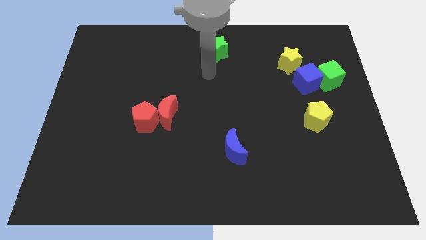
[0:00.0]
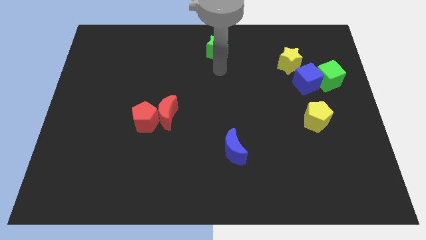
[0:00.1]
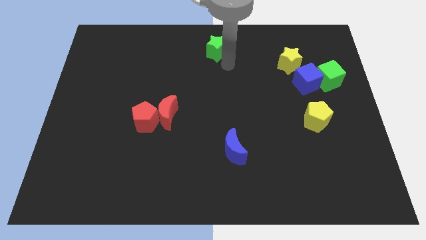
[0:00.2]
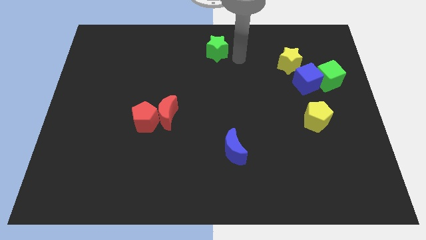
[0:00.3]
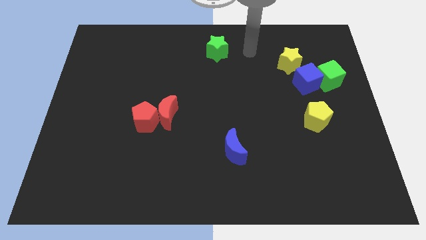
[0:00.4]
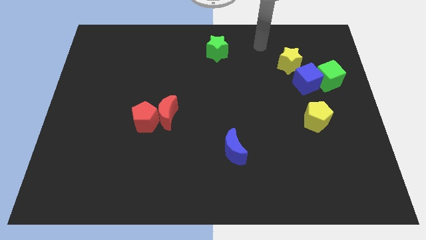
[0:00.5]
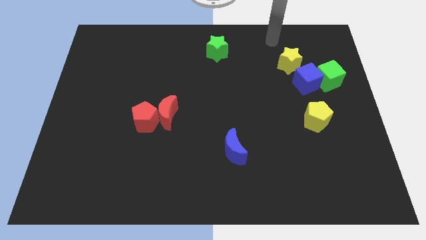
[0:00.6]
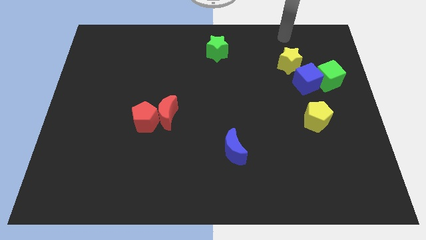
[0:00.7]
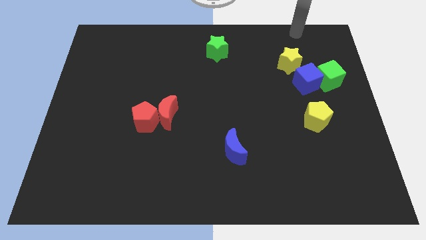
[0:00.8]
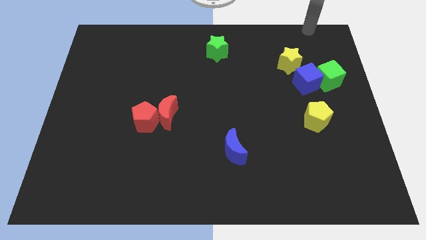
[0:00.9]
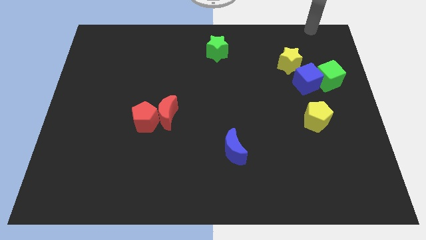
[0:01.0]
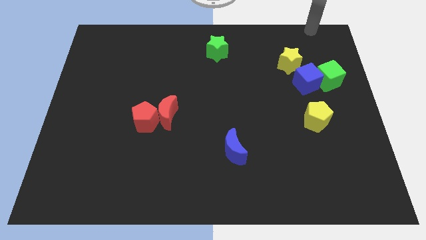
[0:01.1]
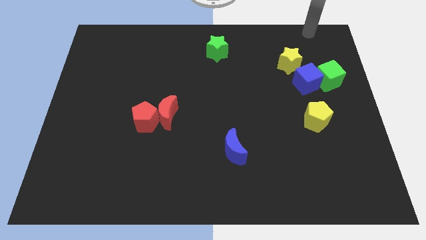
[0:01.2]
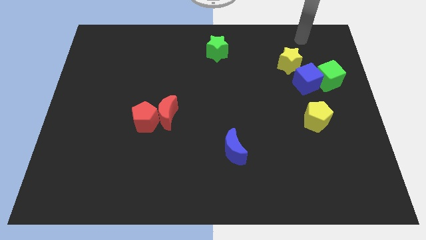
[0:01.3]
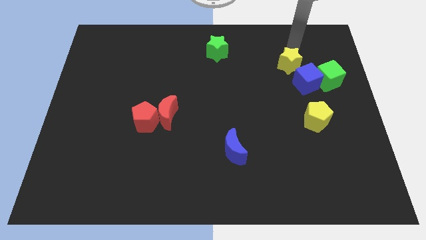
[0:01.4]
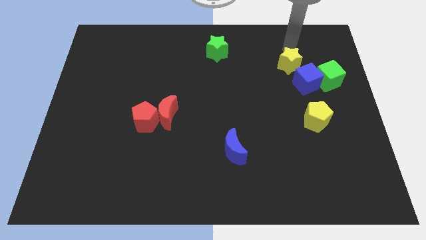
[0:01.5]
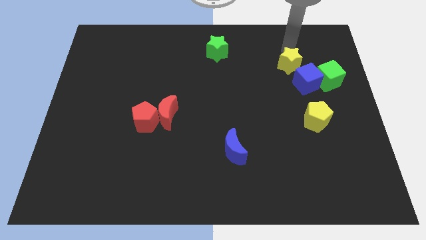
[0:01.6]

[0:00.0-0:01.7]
go away from the green star

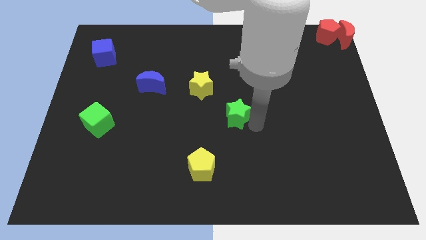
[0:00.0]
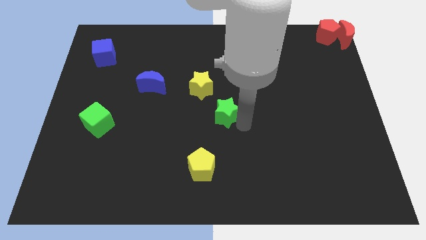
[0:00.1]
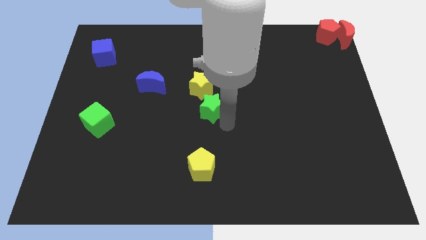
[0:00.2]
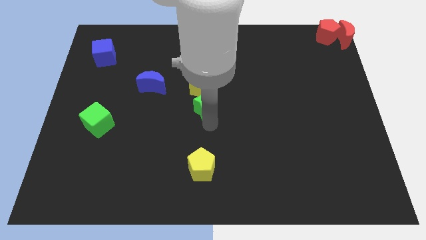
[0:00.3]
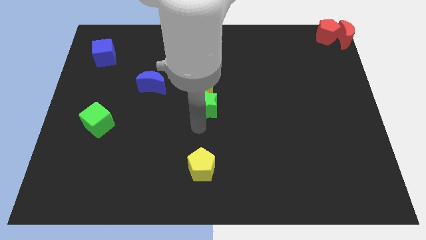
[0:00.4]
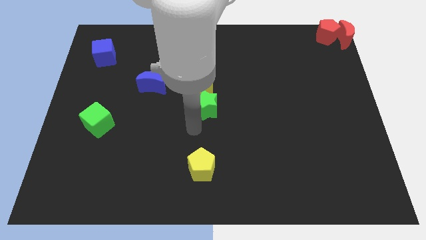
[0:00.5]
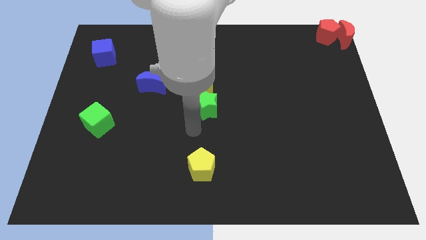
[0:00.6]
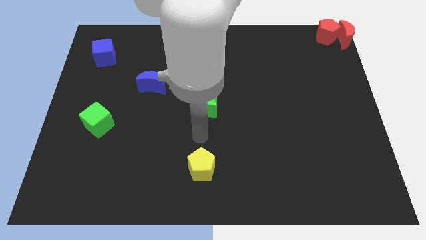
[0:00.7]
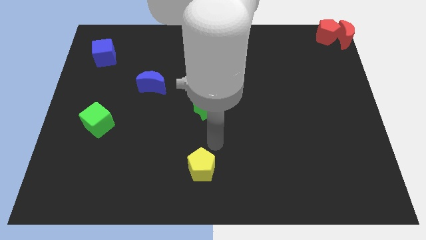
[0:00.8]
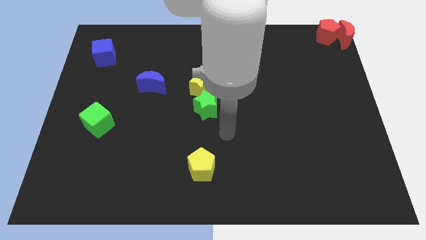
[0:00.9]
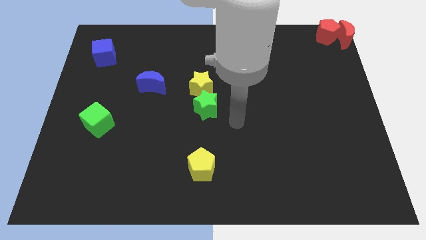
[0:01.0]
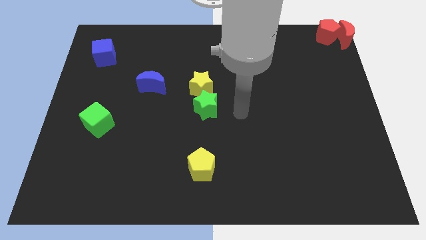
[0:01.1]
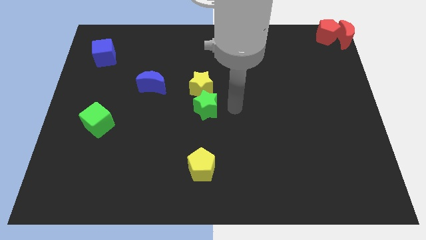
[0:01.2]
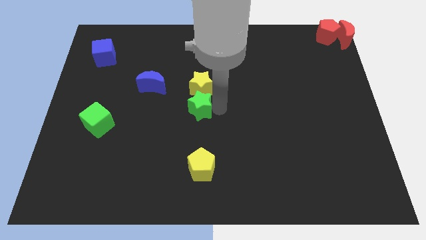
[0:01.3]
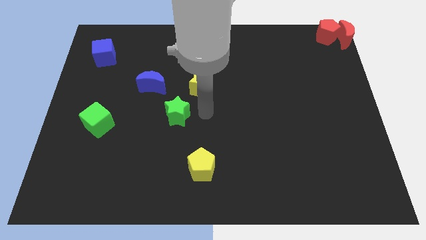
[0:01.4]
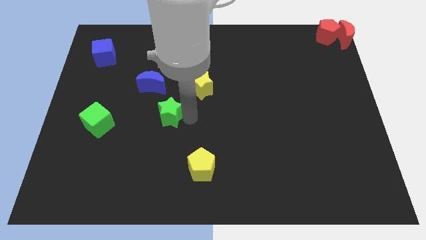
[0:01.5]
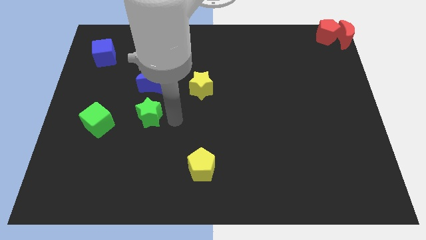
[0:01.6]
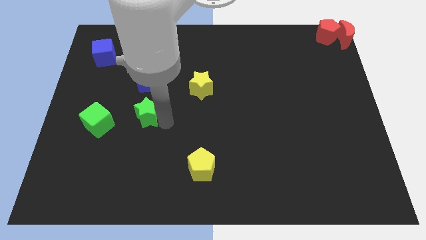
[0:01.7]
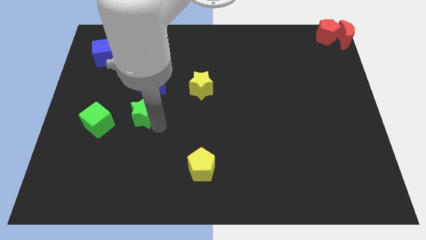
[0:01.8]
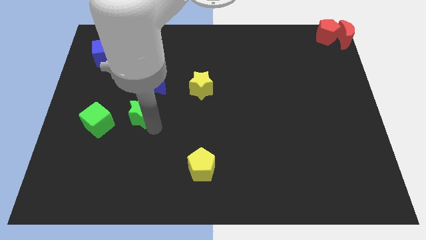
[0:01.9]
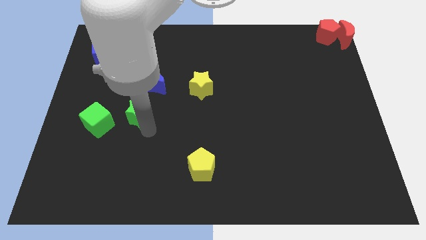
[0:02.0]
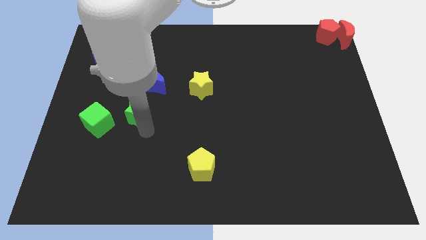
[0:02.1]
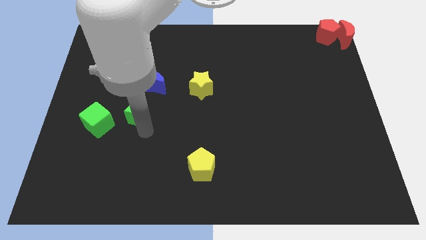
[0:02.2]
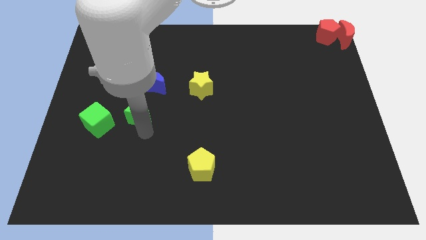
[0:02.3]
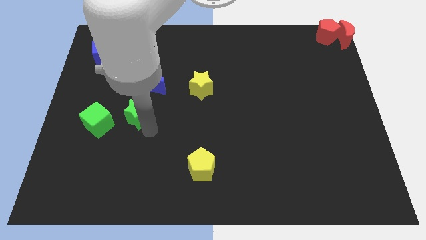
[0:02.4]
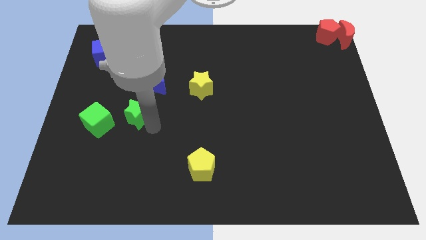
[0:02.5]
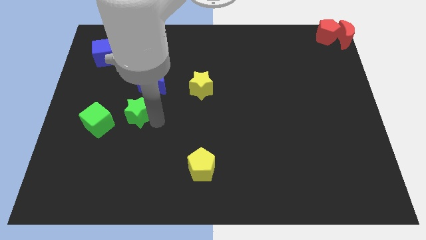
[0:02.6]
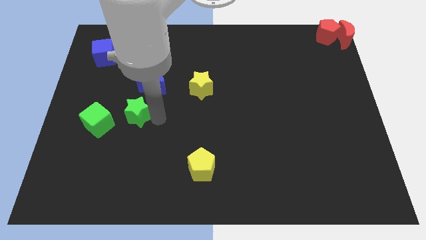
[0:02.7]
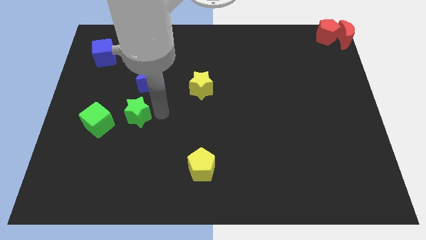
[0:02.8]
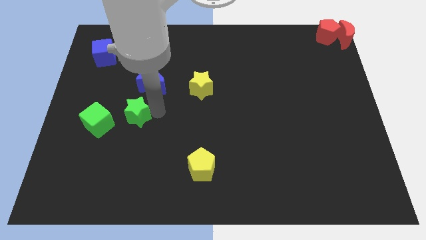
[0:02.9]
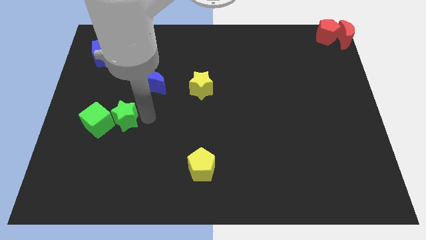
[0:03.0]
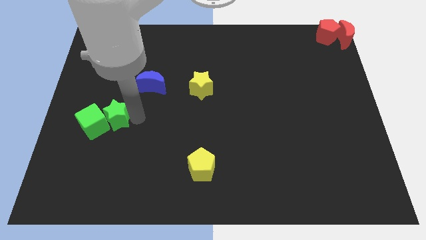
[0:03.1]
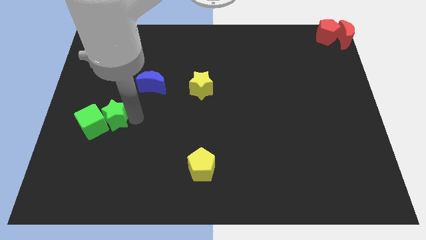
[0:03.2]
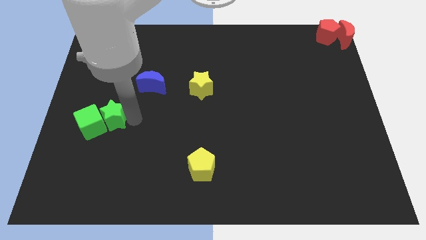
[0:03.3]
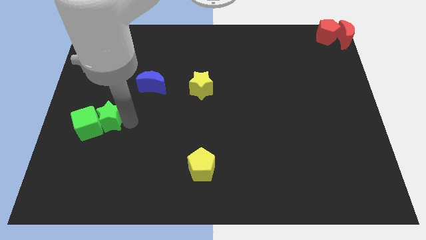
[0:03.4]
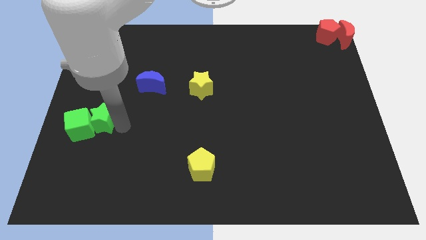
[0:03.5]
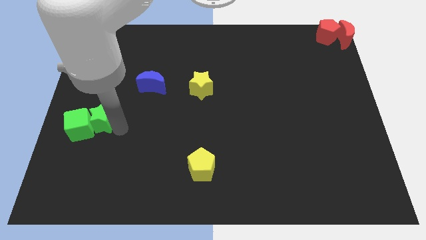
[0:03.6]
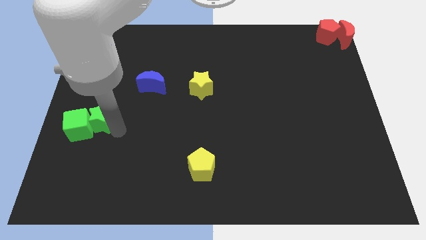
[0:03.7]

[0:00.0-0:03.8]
push the green star into the green cube

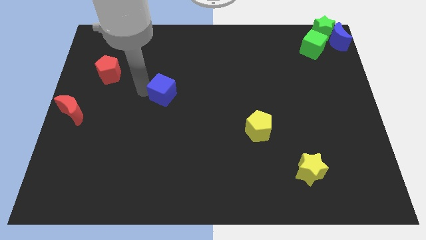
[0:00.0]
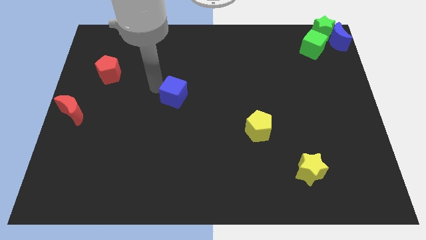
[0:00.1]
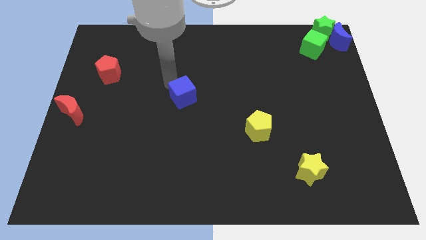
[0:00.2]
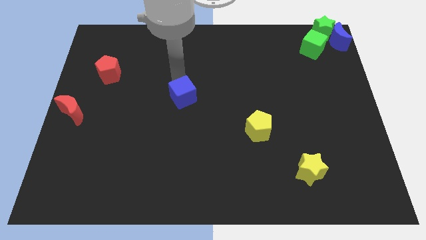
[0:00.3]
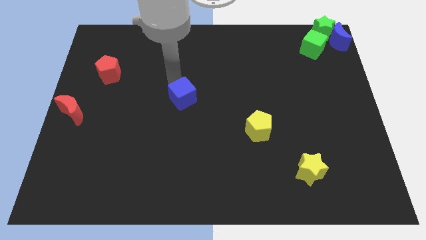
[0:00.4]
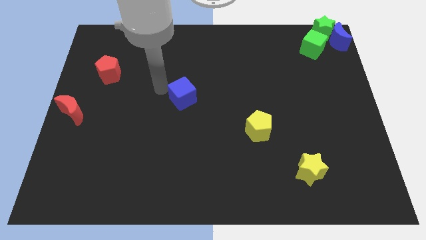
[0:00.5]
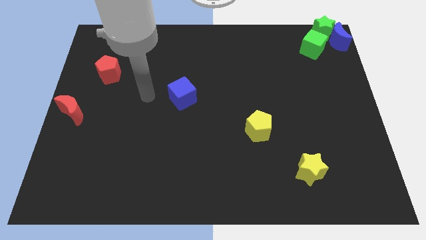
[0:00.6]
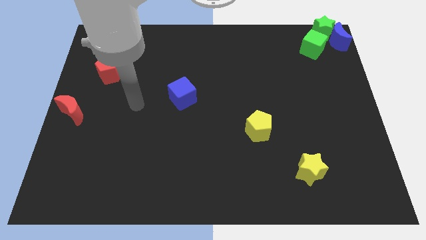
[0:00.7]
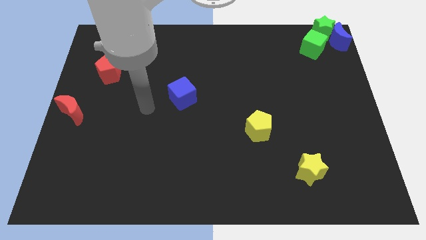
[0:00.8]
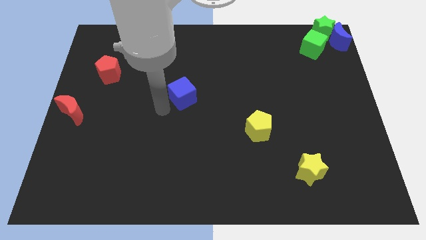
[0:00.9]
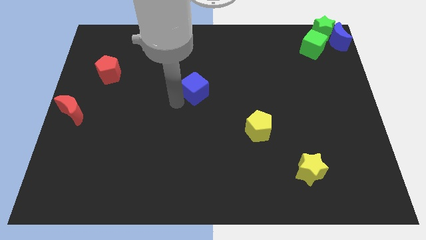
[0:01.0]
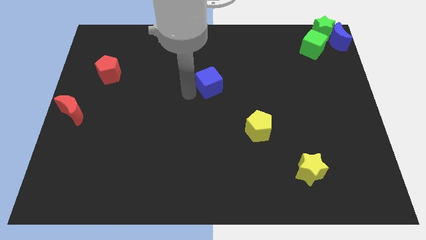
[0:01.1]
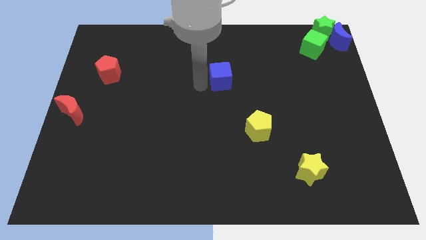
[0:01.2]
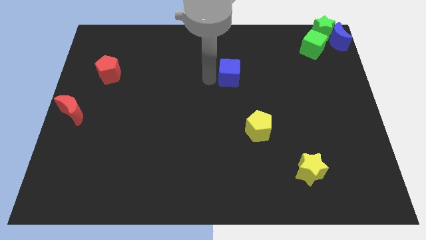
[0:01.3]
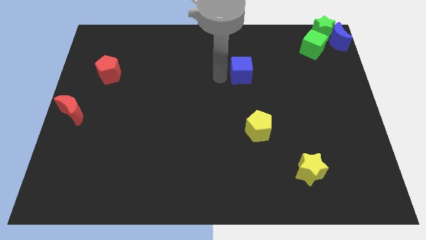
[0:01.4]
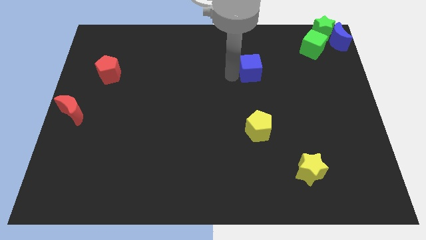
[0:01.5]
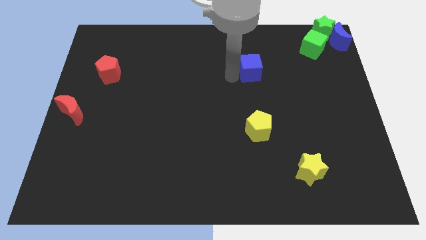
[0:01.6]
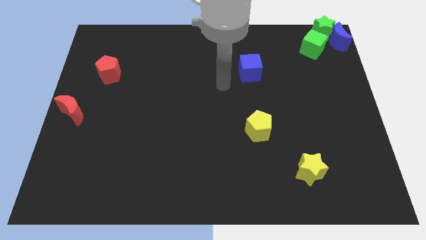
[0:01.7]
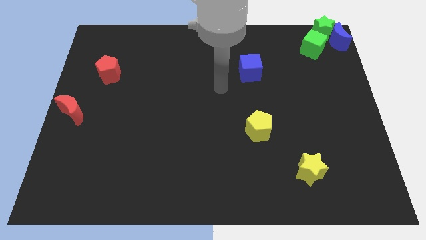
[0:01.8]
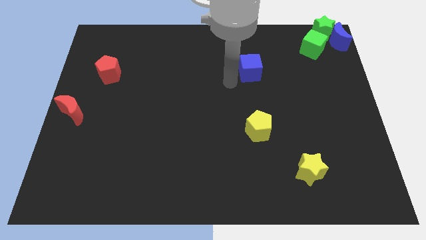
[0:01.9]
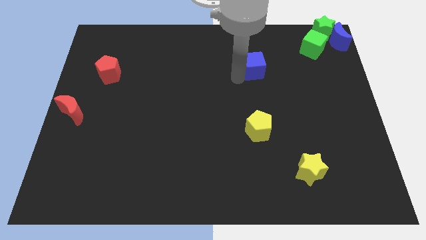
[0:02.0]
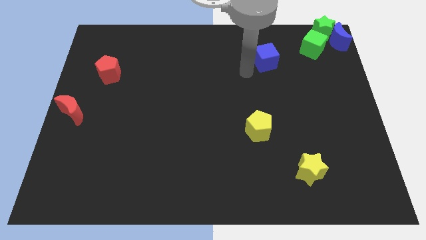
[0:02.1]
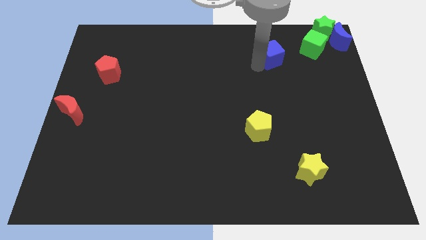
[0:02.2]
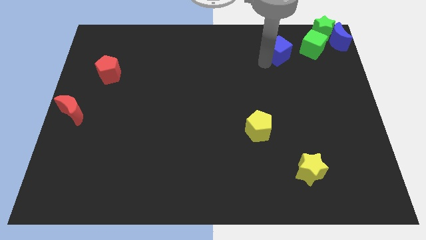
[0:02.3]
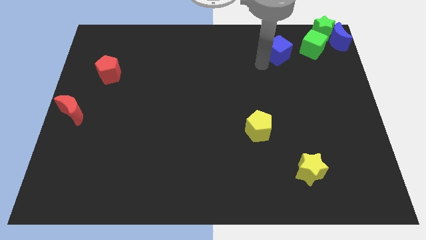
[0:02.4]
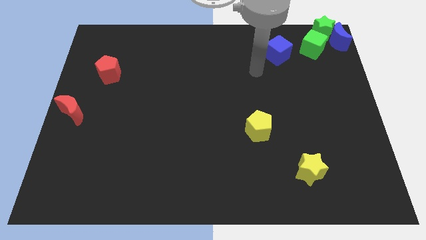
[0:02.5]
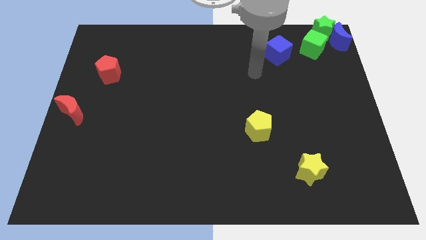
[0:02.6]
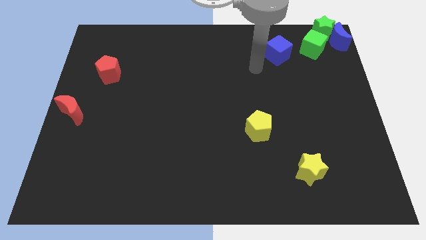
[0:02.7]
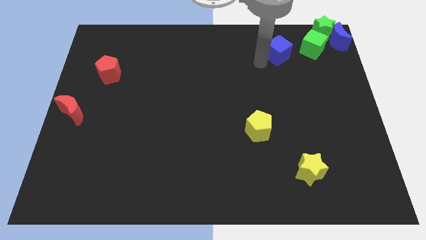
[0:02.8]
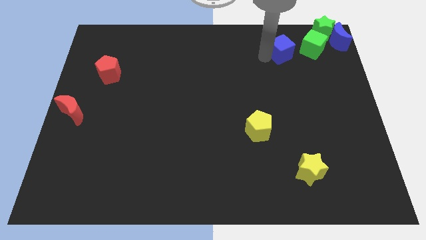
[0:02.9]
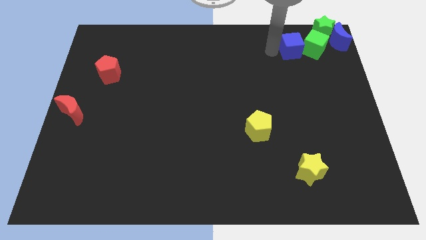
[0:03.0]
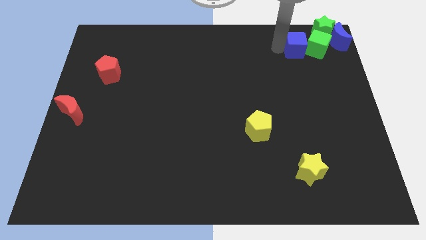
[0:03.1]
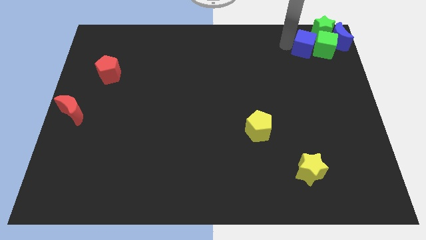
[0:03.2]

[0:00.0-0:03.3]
move the blue cube diagonally top right to the yellow pentagon

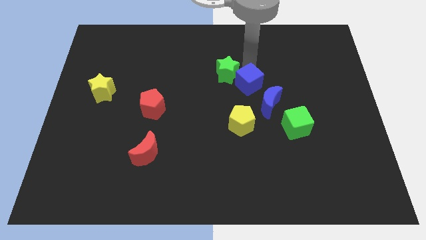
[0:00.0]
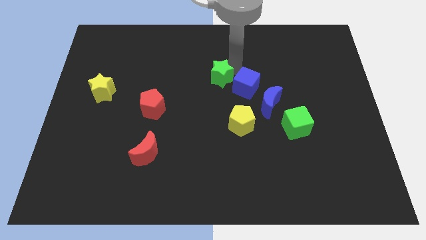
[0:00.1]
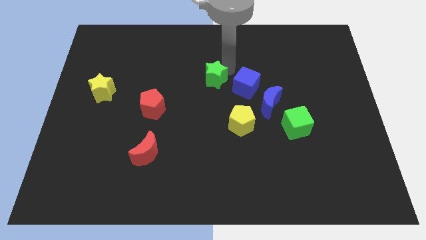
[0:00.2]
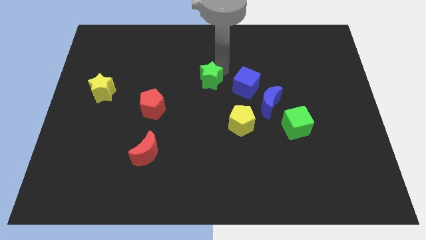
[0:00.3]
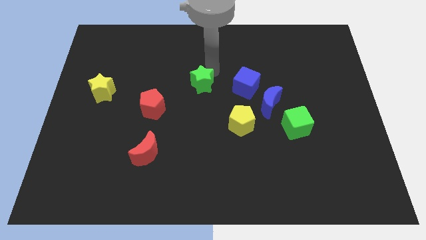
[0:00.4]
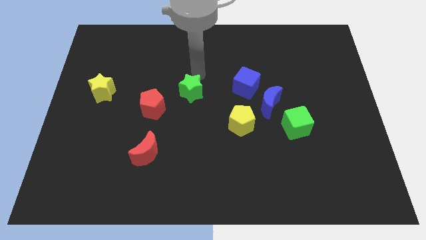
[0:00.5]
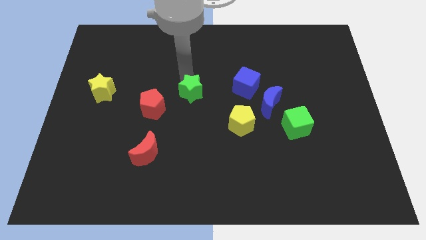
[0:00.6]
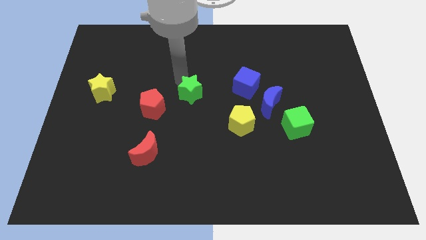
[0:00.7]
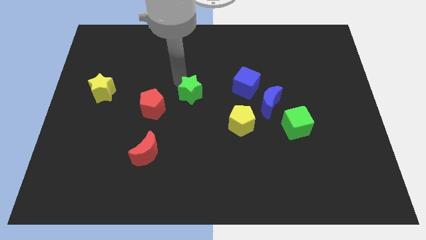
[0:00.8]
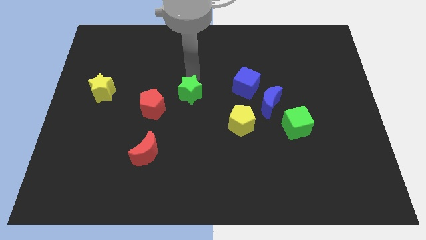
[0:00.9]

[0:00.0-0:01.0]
push the green star to the top right of the red pentagon
